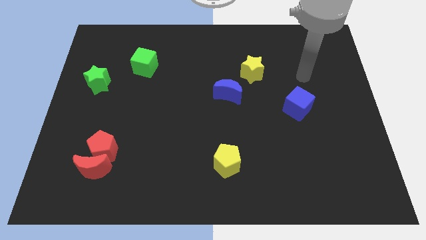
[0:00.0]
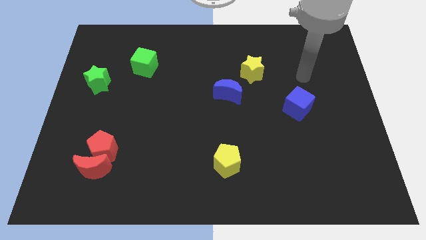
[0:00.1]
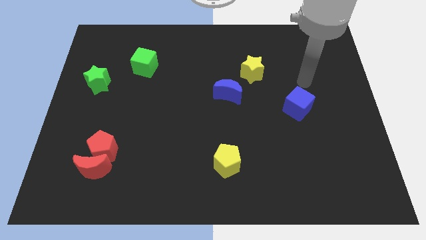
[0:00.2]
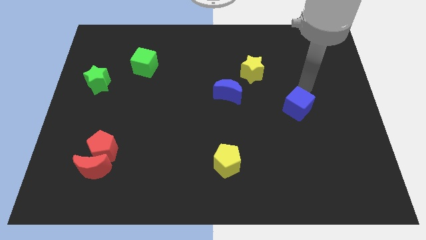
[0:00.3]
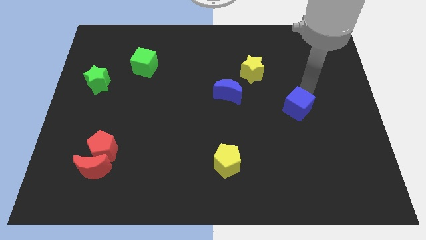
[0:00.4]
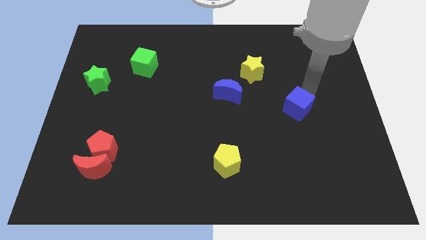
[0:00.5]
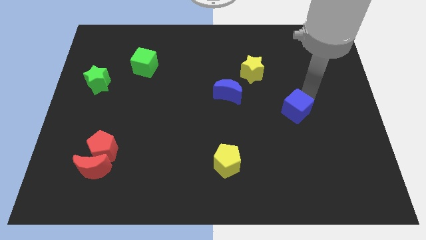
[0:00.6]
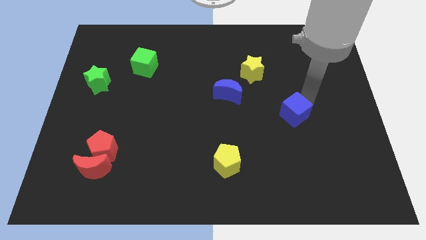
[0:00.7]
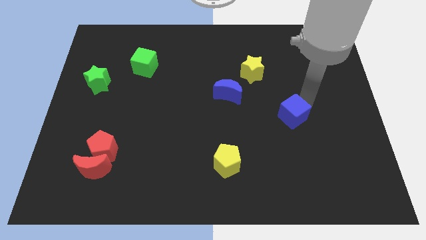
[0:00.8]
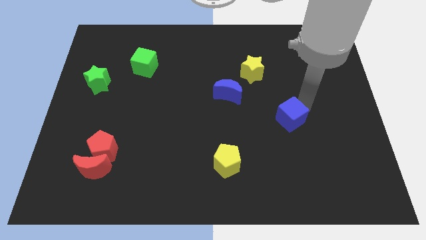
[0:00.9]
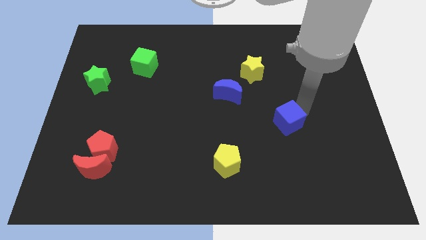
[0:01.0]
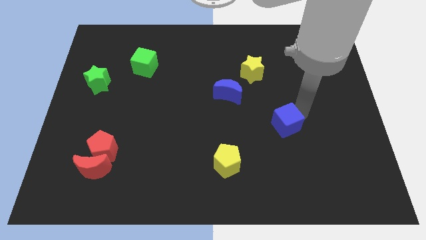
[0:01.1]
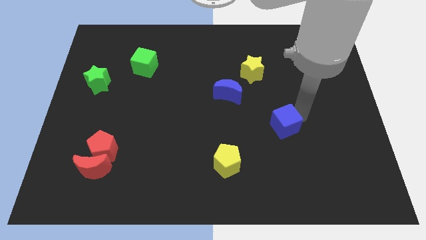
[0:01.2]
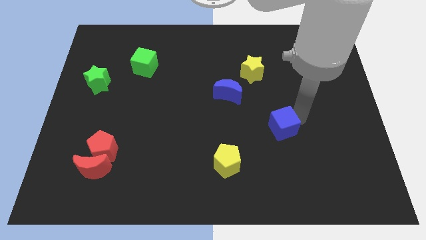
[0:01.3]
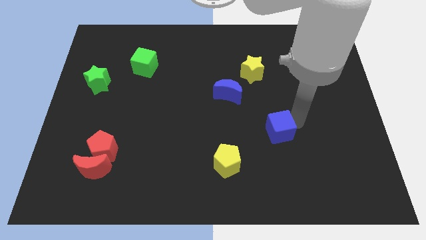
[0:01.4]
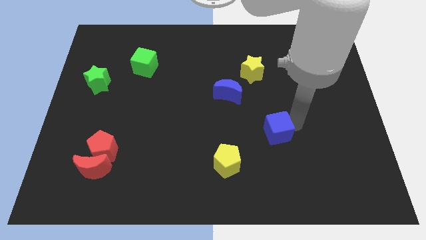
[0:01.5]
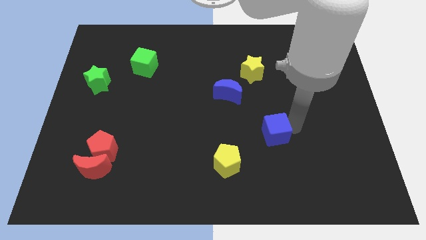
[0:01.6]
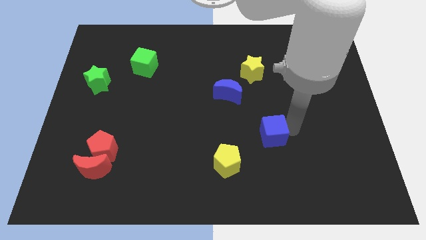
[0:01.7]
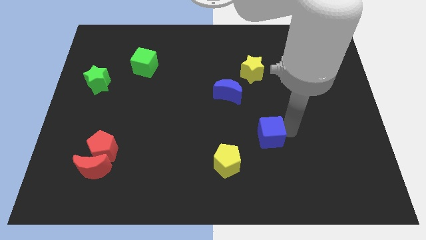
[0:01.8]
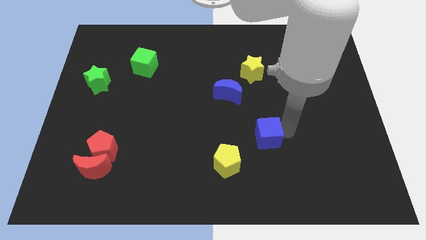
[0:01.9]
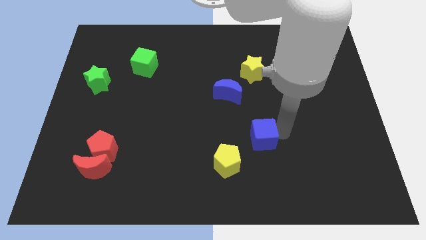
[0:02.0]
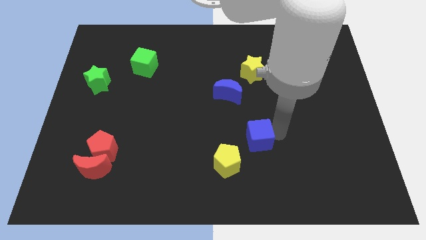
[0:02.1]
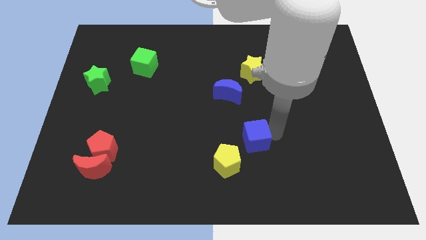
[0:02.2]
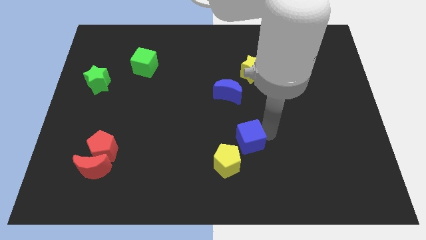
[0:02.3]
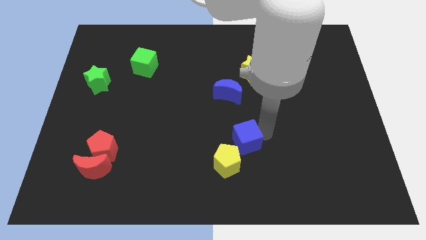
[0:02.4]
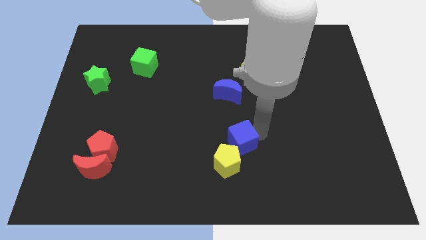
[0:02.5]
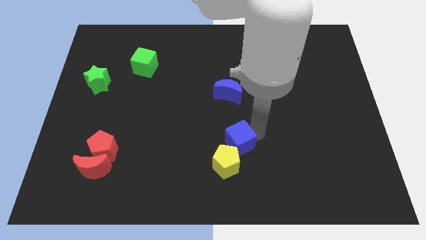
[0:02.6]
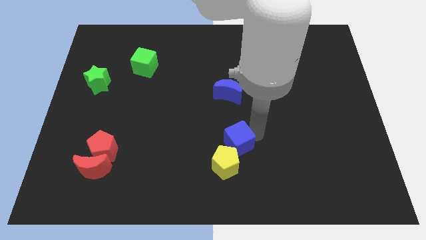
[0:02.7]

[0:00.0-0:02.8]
push the blue cube to the yellow pentagon

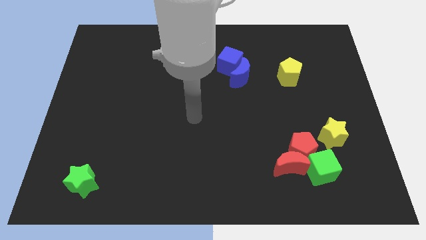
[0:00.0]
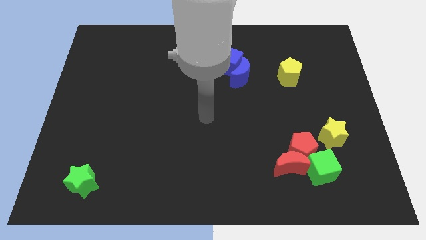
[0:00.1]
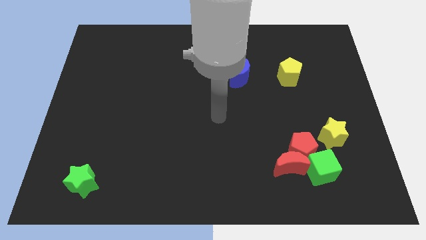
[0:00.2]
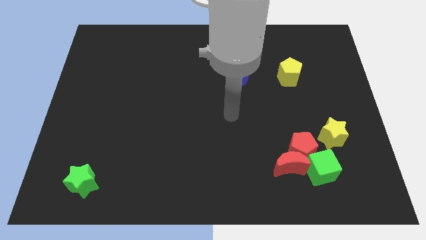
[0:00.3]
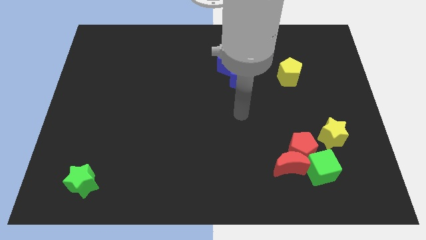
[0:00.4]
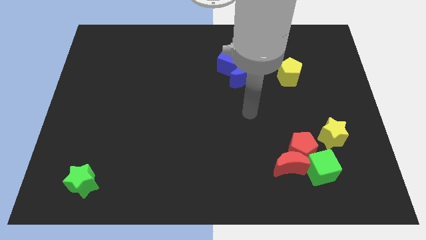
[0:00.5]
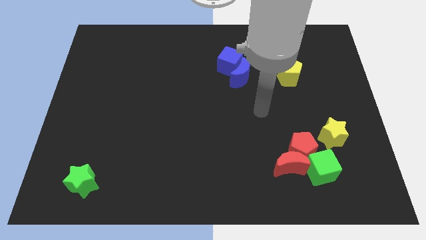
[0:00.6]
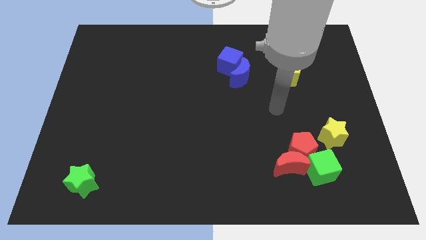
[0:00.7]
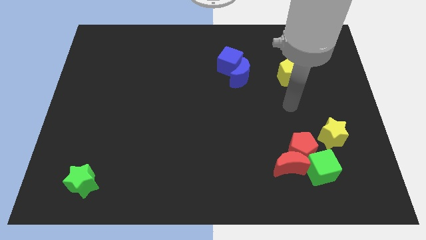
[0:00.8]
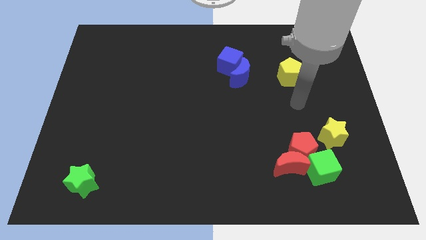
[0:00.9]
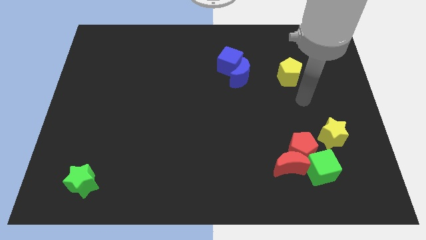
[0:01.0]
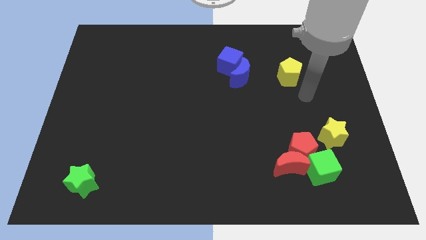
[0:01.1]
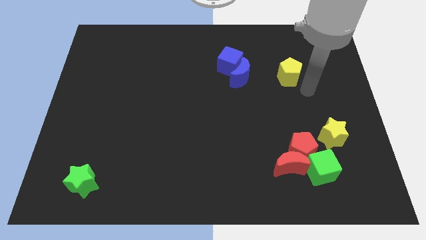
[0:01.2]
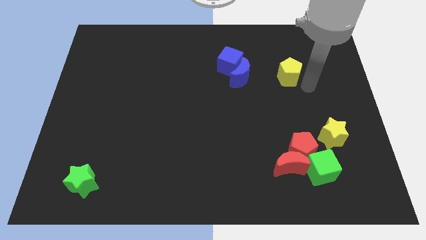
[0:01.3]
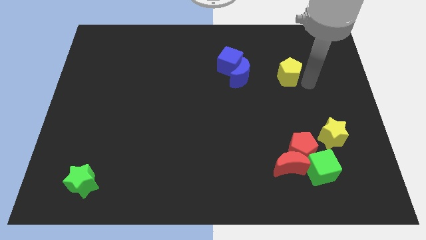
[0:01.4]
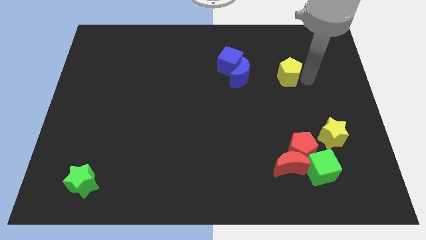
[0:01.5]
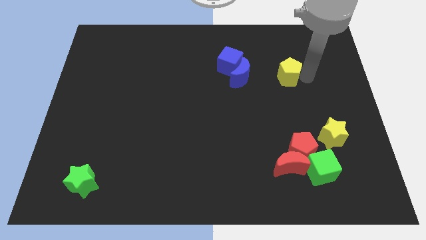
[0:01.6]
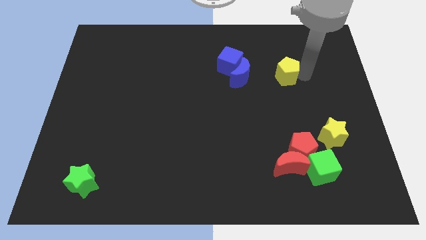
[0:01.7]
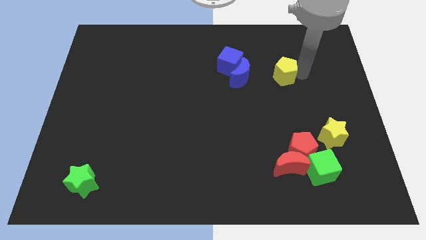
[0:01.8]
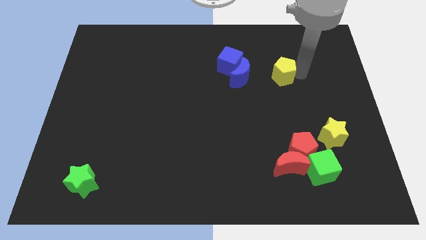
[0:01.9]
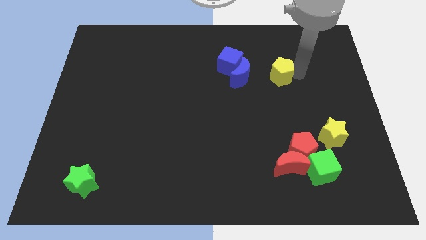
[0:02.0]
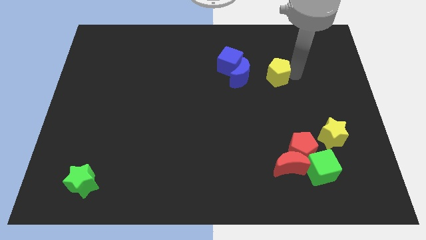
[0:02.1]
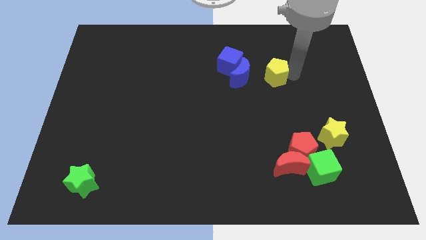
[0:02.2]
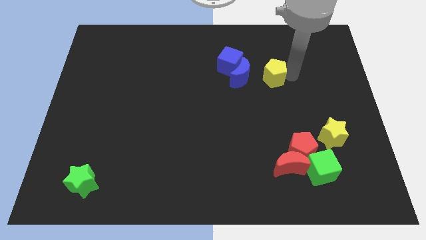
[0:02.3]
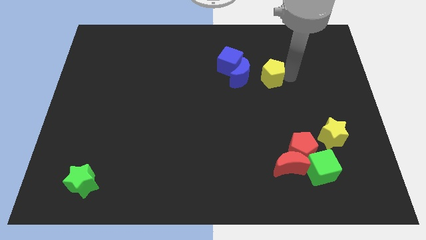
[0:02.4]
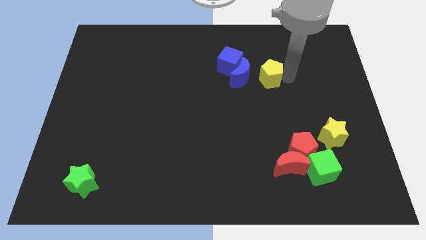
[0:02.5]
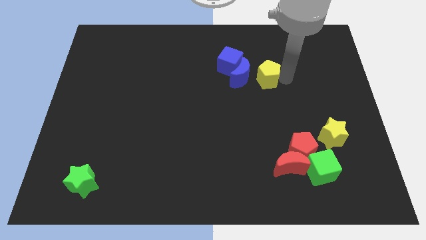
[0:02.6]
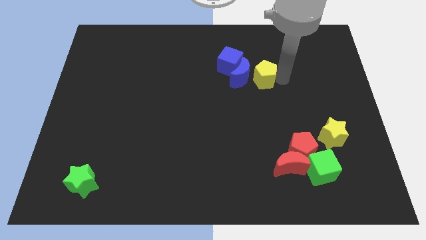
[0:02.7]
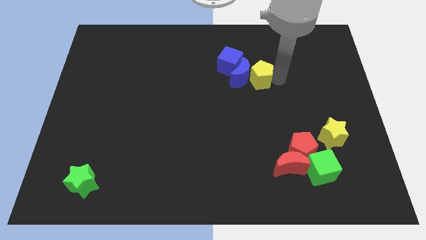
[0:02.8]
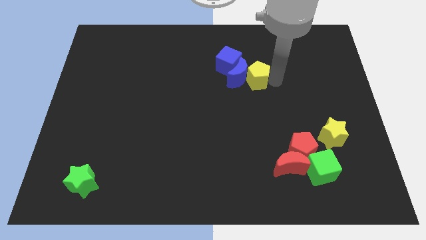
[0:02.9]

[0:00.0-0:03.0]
push the yellow pentagon towards the blue moon

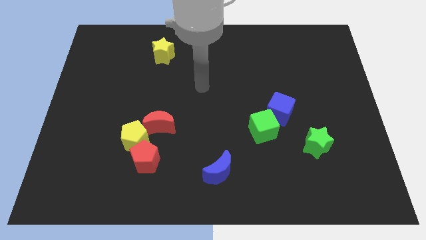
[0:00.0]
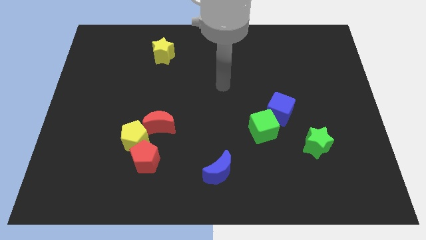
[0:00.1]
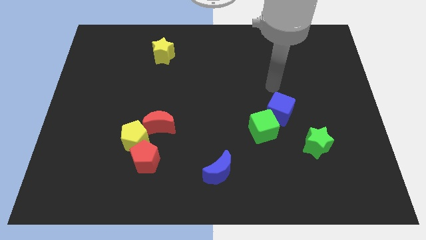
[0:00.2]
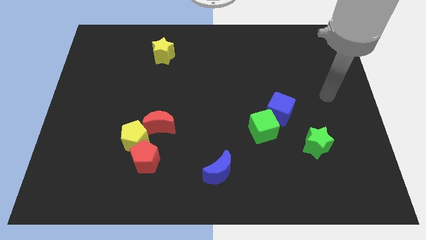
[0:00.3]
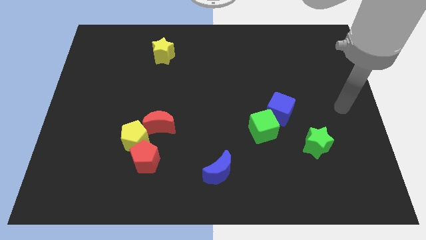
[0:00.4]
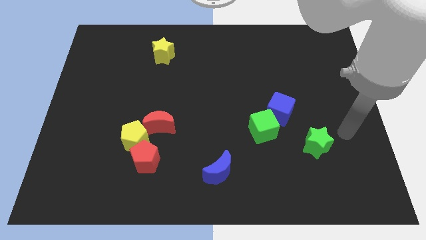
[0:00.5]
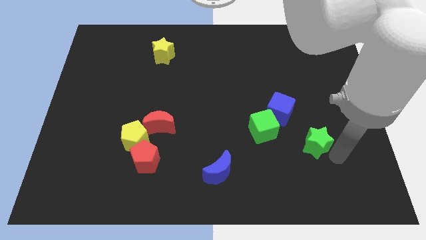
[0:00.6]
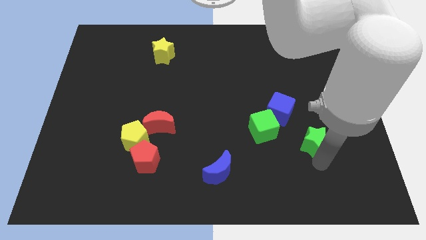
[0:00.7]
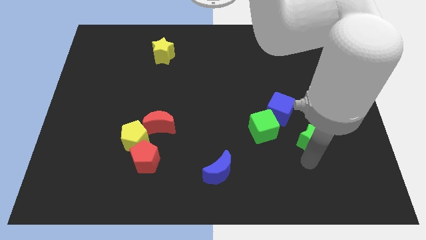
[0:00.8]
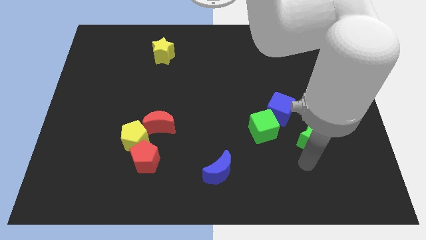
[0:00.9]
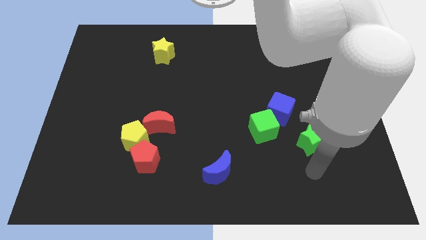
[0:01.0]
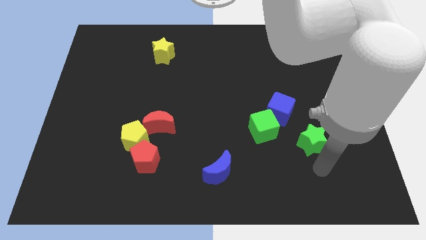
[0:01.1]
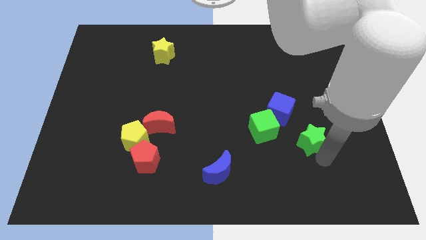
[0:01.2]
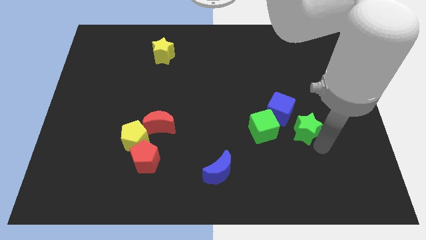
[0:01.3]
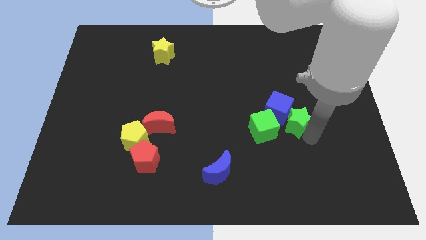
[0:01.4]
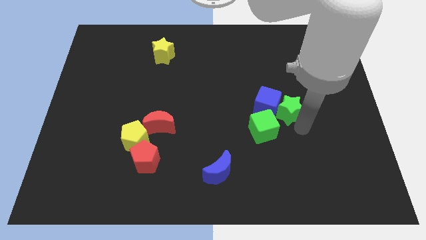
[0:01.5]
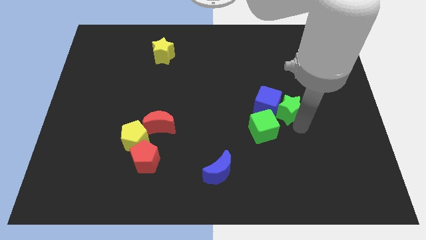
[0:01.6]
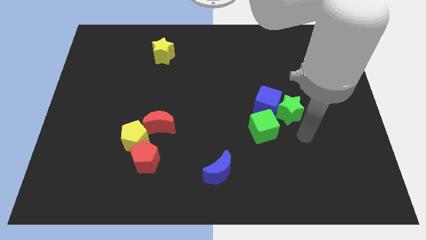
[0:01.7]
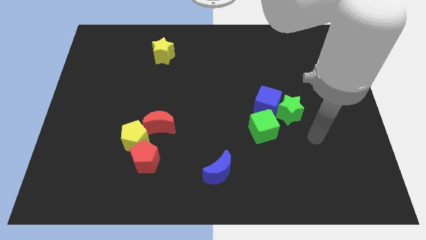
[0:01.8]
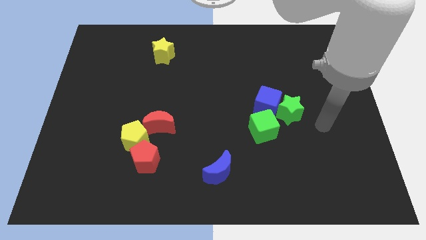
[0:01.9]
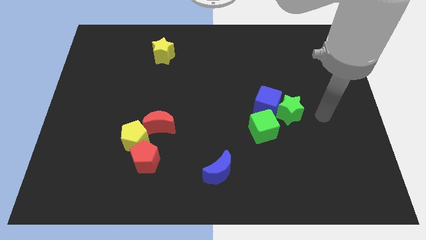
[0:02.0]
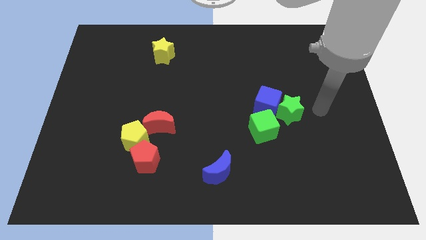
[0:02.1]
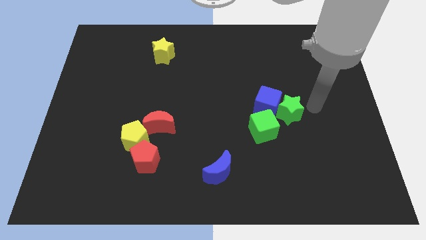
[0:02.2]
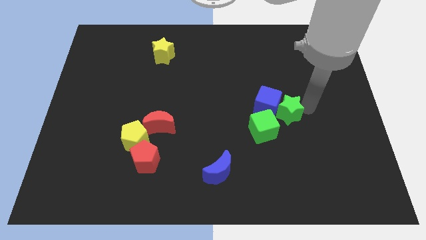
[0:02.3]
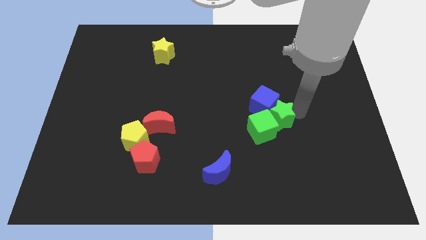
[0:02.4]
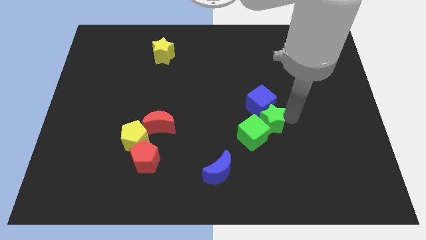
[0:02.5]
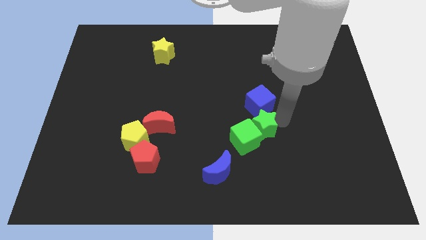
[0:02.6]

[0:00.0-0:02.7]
slide the green star towards the green cube
